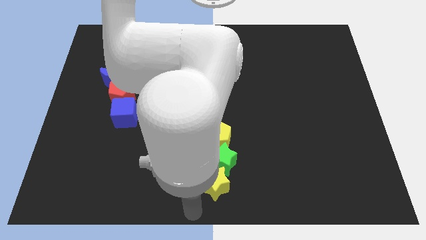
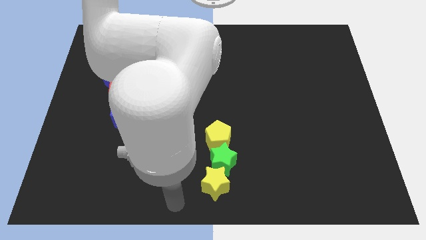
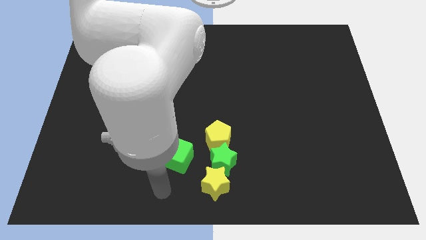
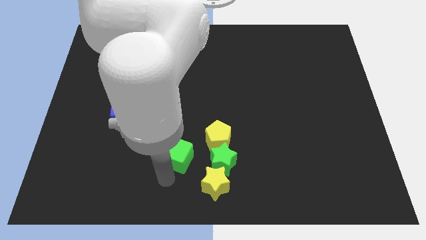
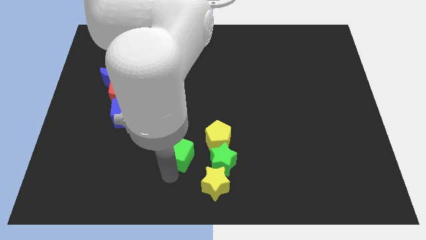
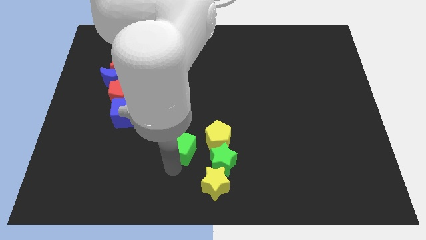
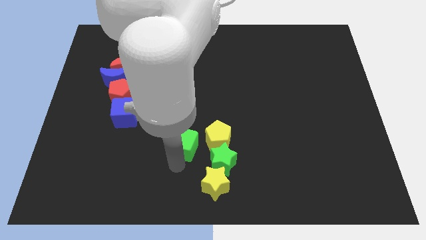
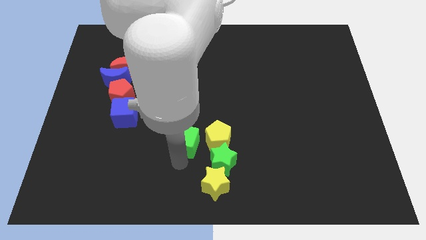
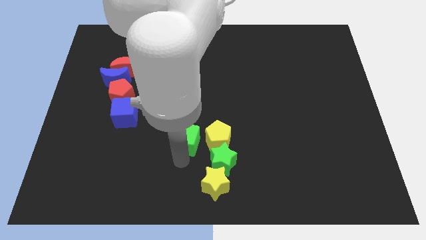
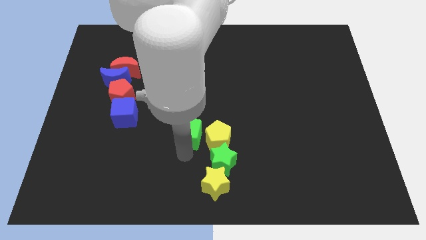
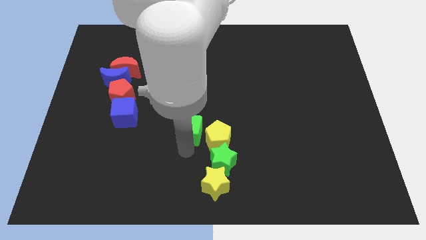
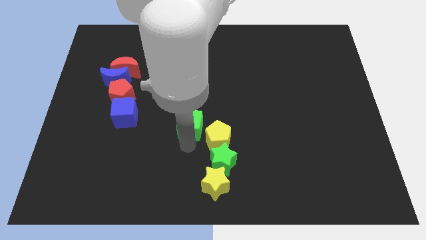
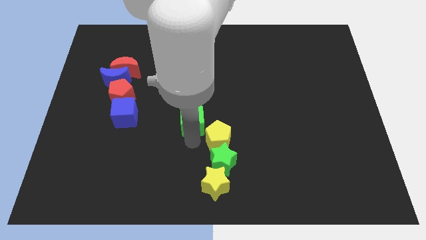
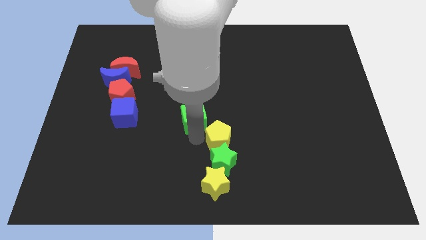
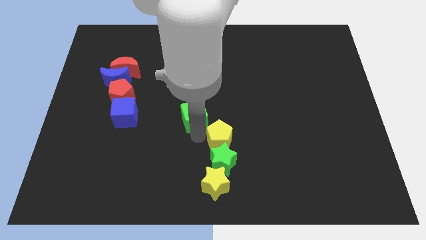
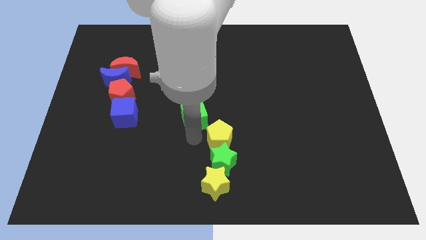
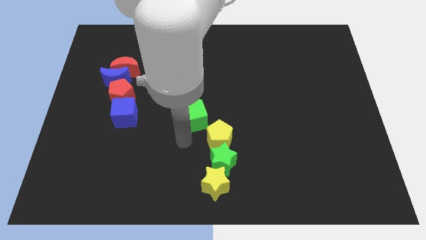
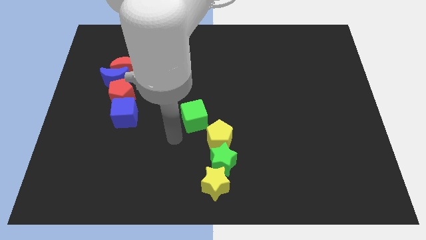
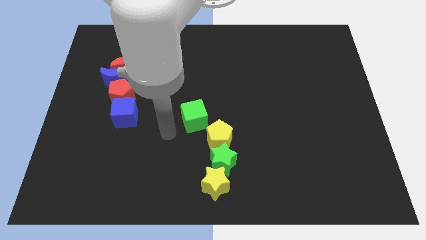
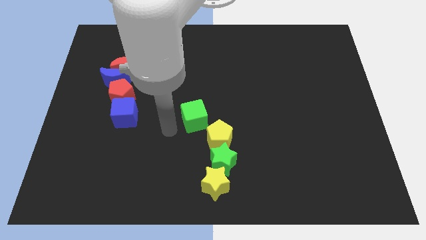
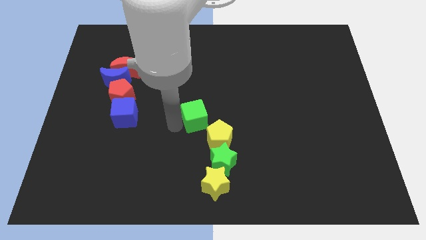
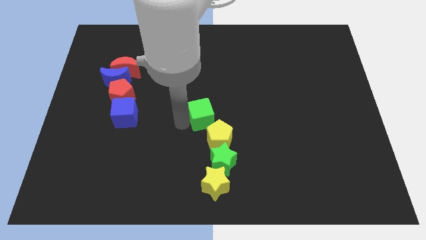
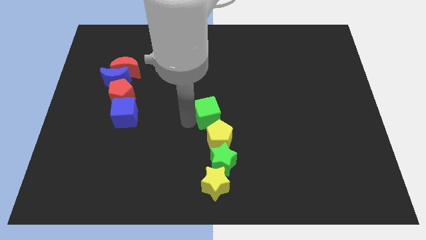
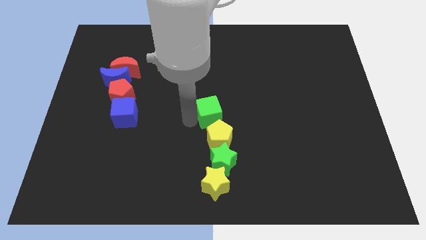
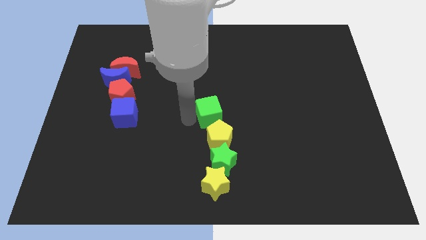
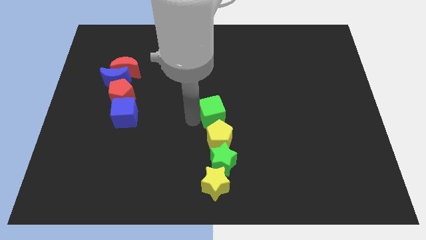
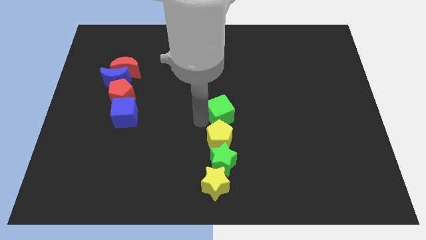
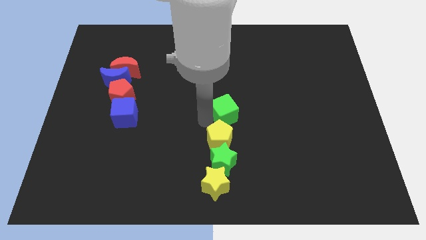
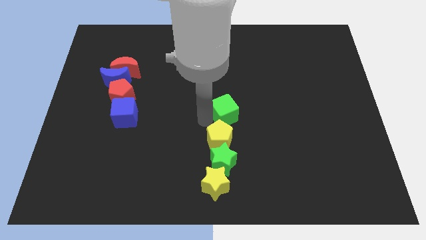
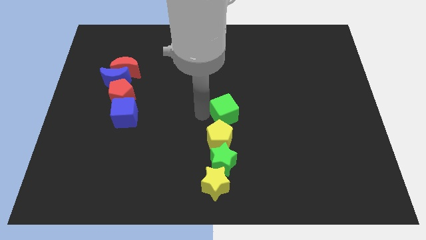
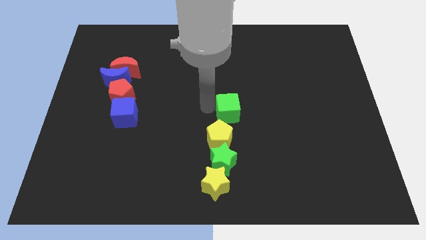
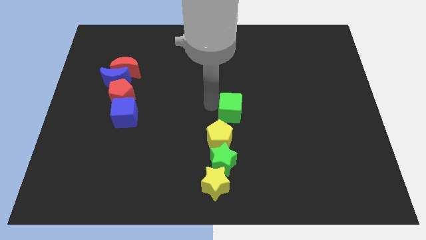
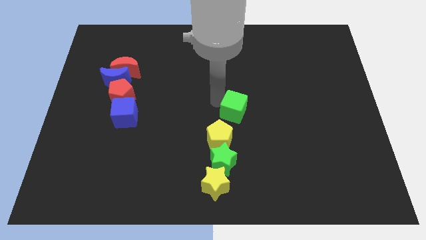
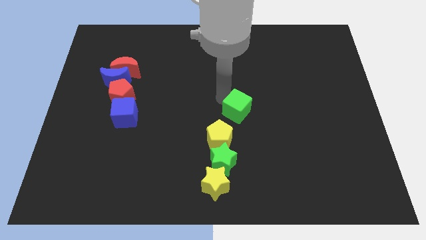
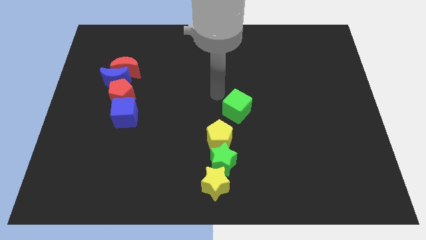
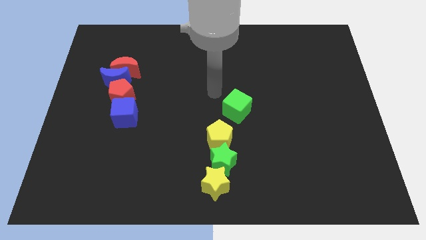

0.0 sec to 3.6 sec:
move the green cube to the top of the yellow pentagon

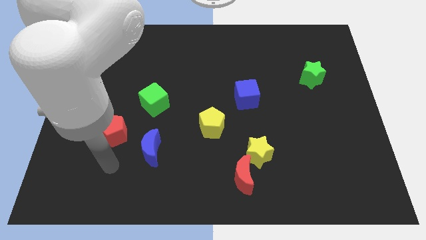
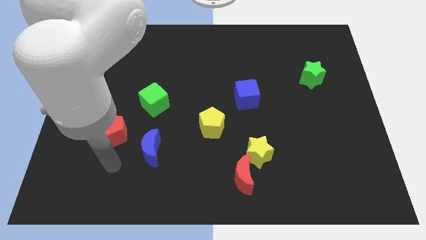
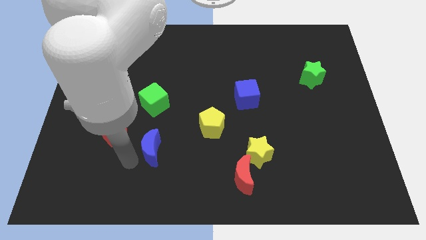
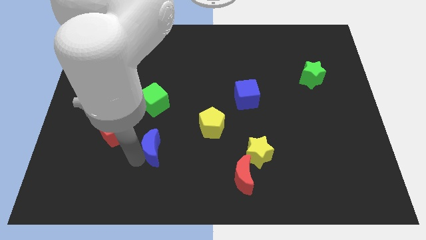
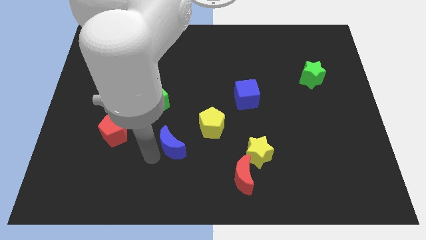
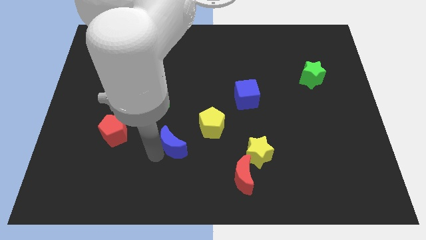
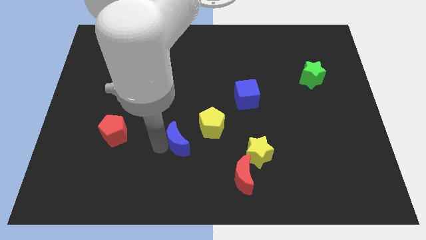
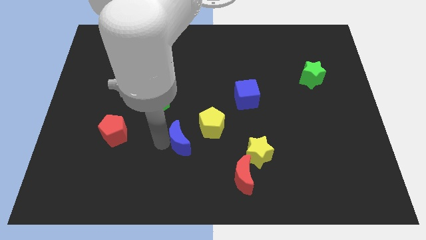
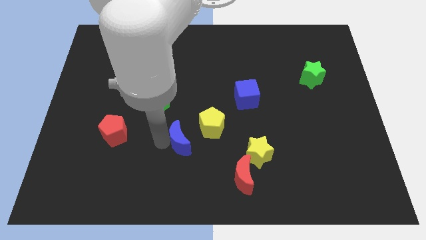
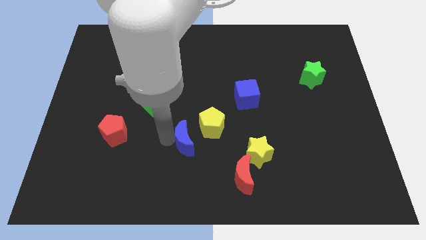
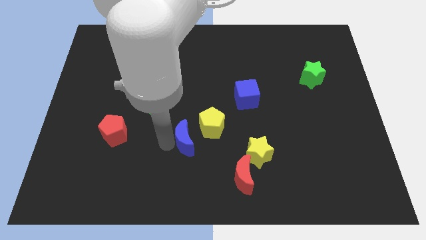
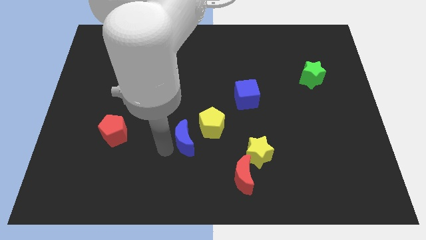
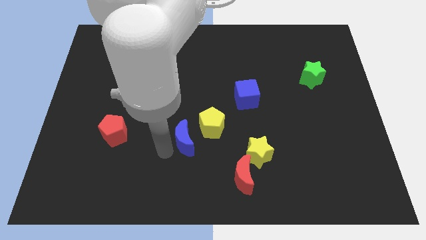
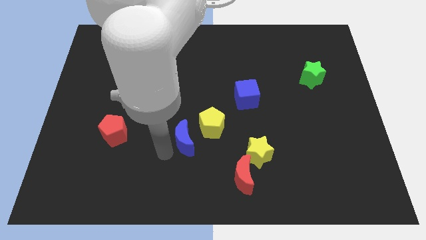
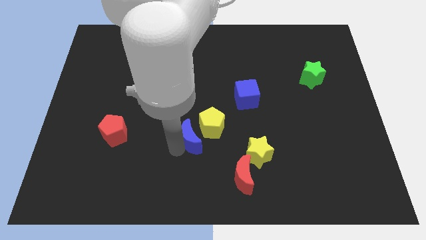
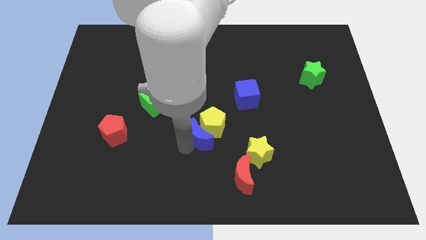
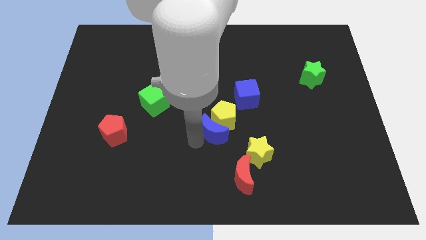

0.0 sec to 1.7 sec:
move the blue crescent towards the yellow pentagon

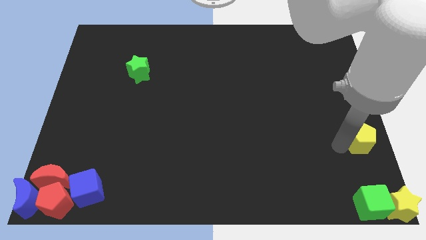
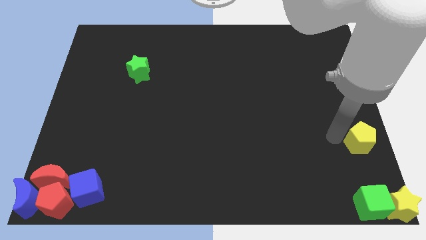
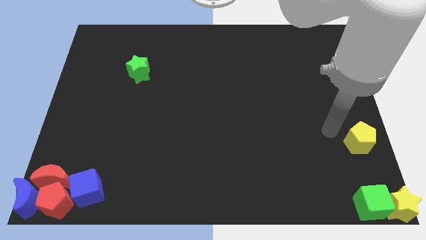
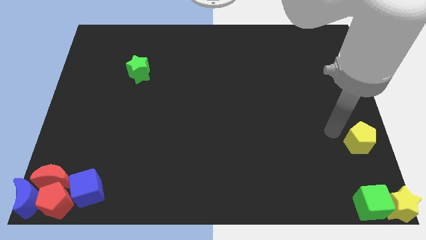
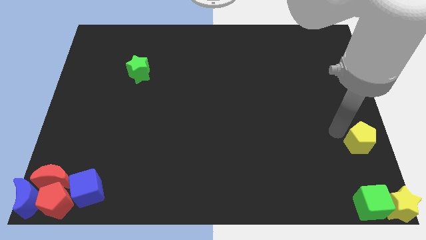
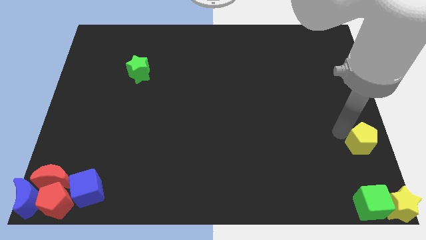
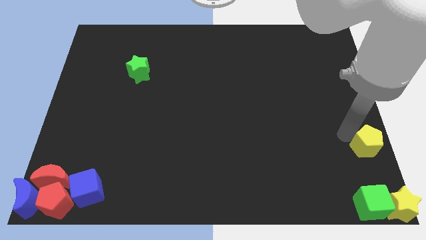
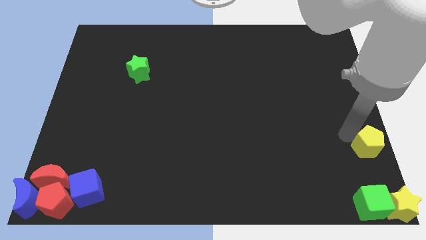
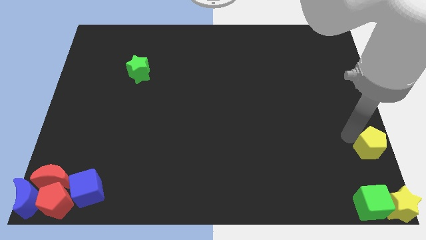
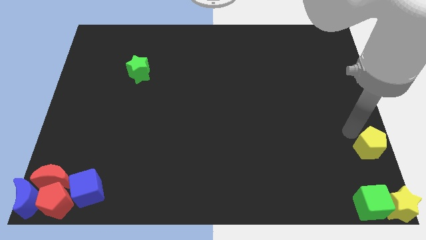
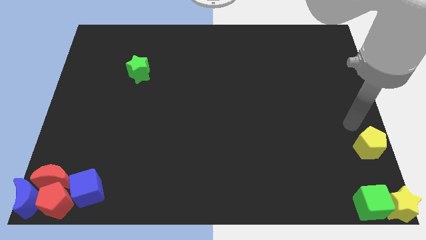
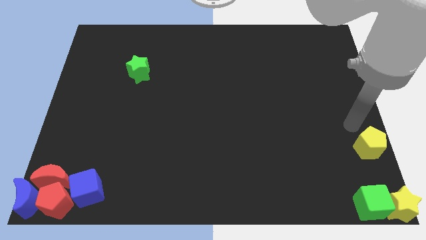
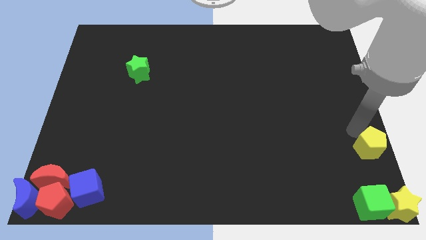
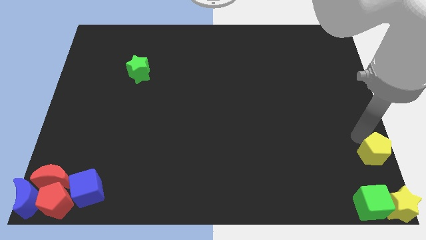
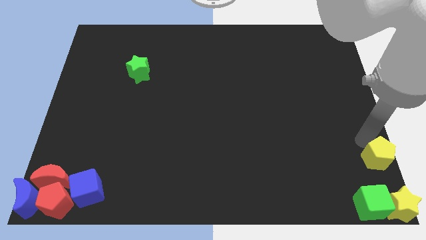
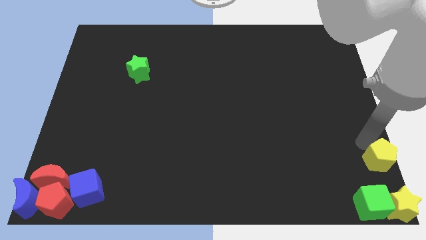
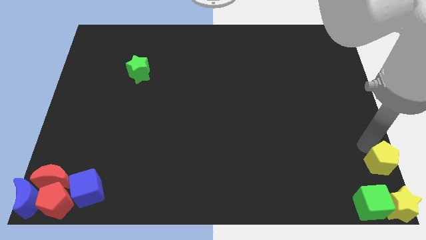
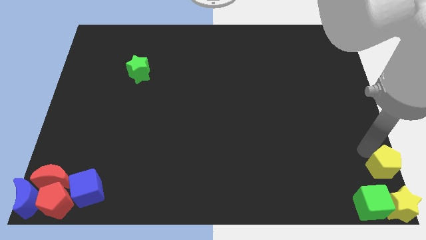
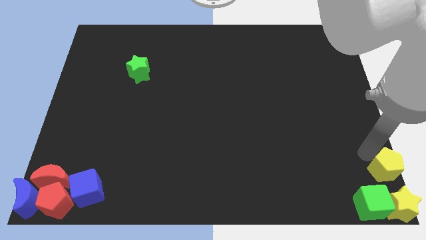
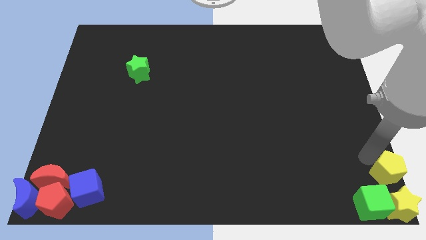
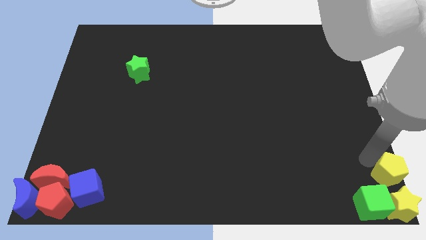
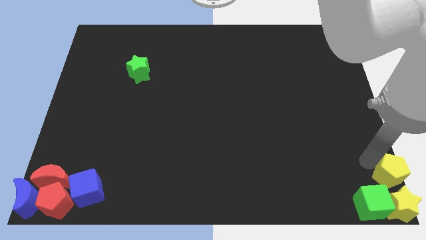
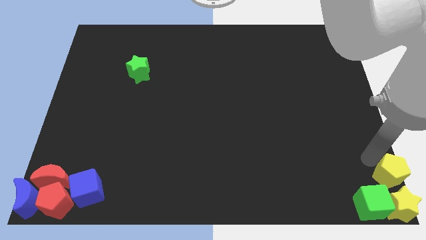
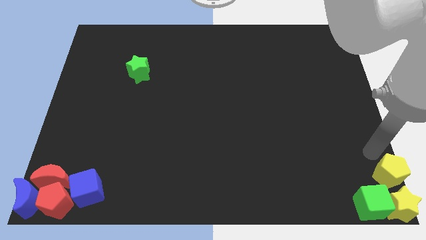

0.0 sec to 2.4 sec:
move the yellow pentagon to the upside of the yellow star

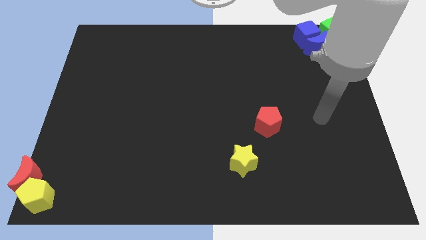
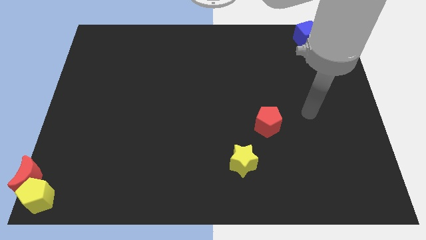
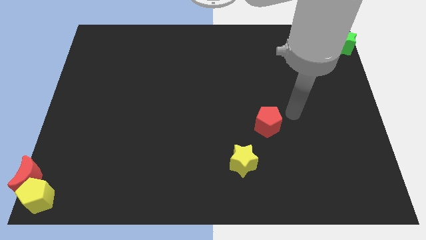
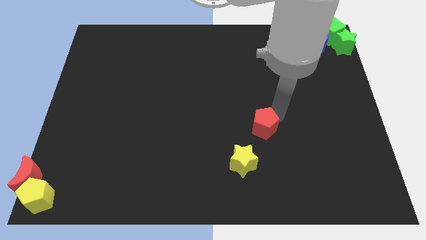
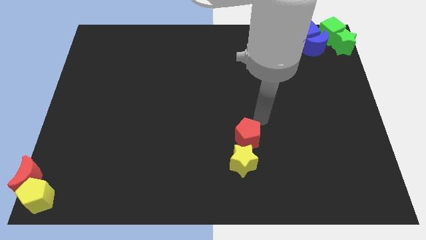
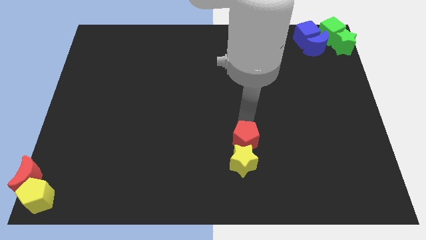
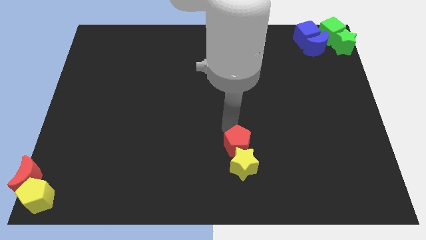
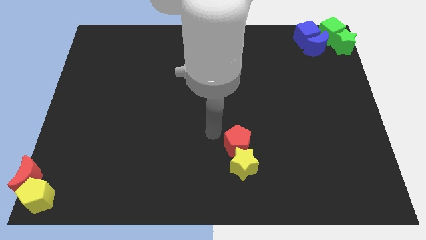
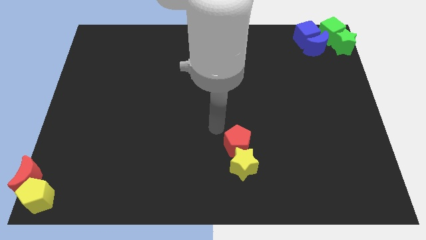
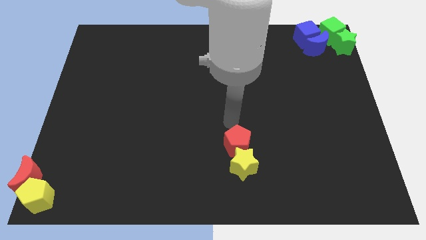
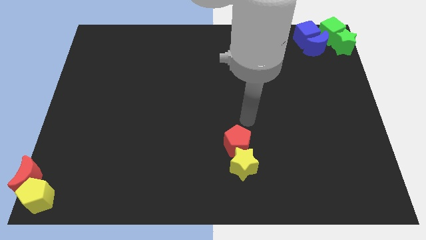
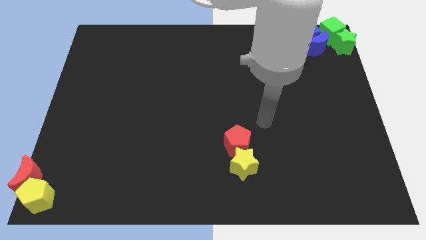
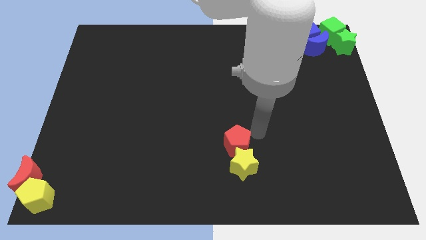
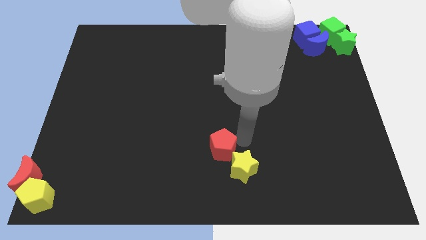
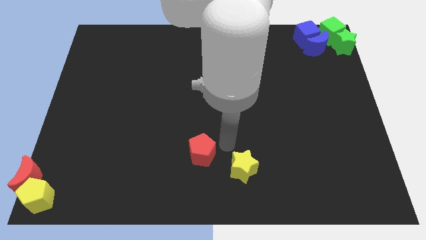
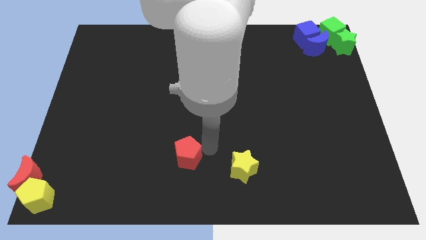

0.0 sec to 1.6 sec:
push the red pentagon to the top left side of the yellow star
